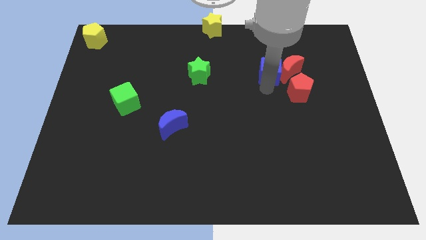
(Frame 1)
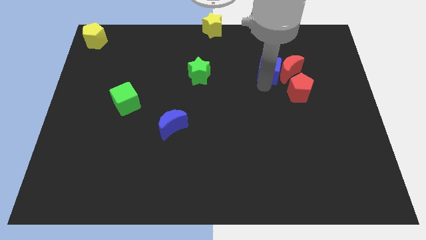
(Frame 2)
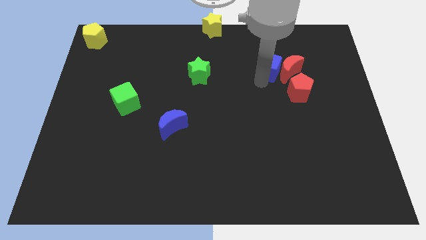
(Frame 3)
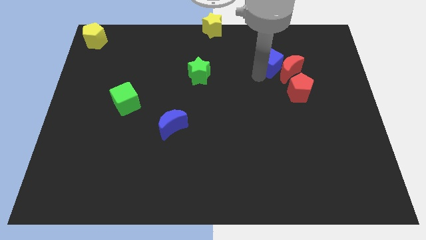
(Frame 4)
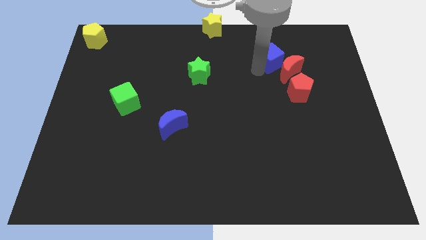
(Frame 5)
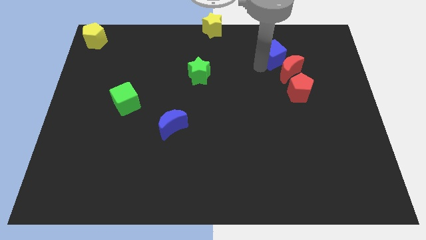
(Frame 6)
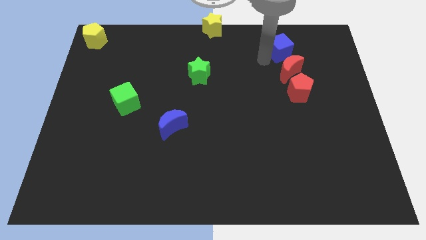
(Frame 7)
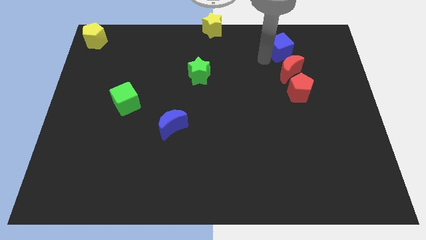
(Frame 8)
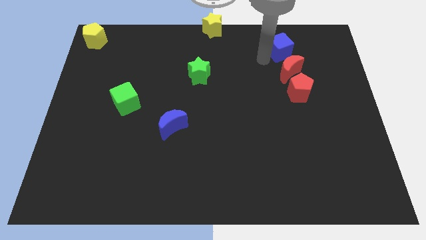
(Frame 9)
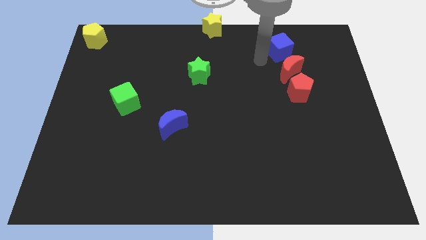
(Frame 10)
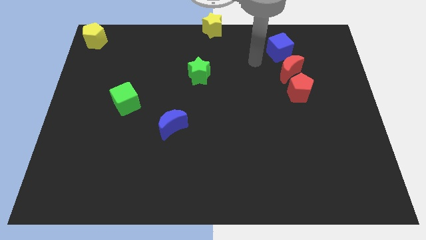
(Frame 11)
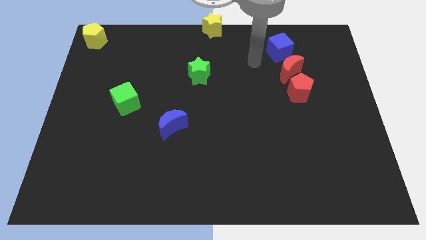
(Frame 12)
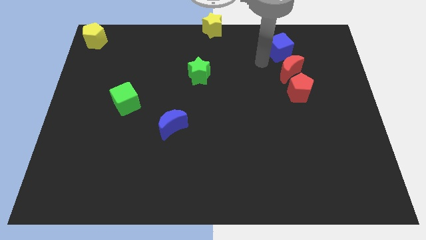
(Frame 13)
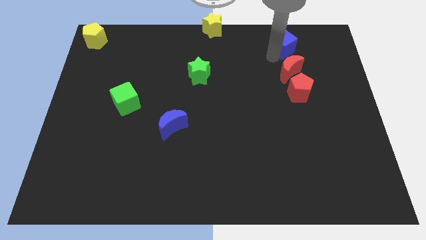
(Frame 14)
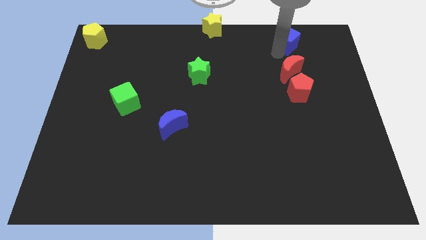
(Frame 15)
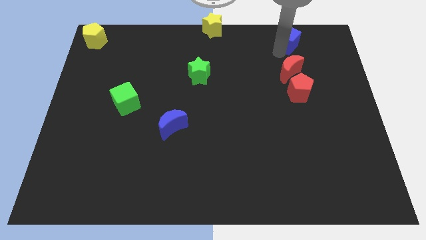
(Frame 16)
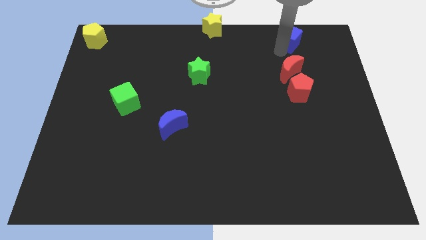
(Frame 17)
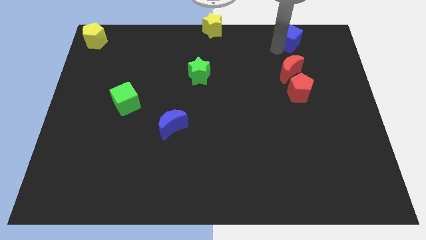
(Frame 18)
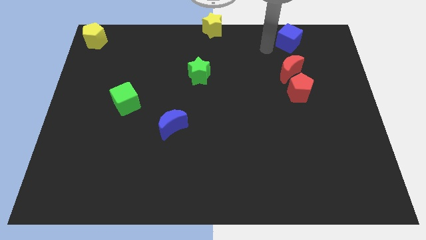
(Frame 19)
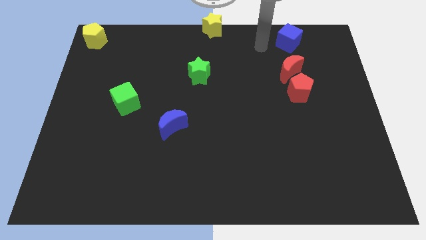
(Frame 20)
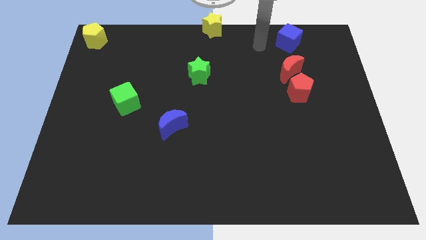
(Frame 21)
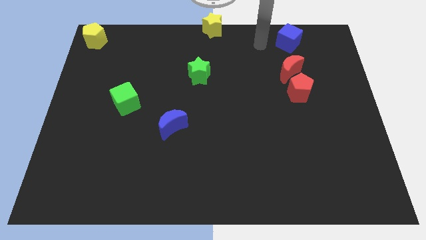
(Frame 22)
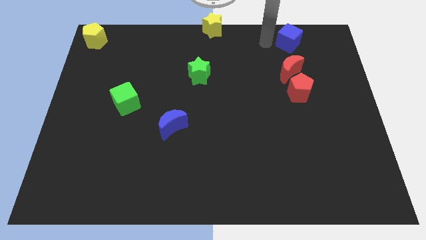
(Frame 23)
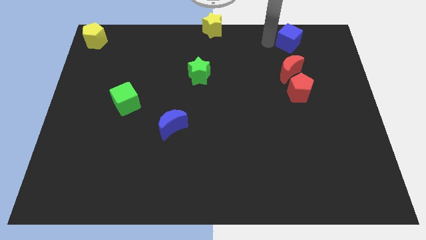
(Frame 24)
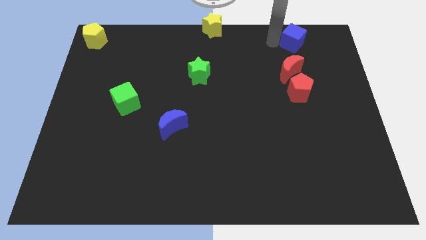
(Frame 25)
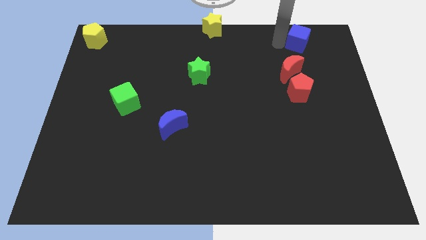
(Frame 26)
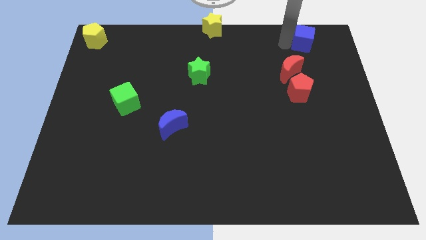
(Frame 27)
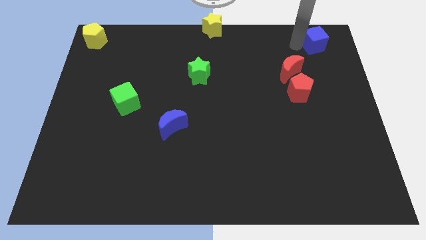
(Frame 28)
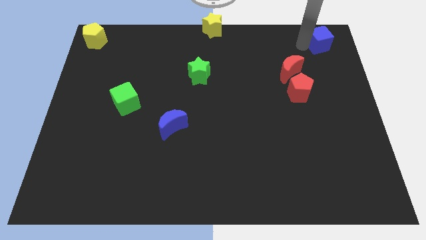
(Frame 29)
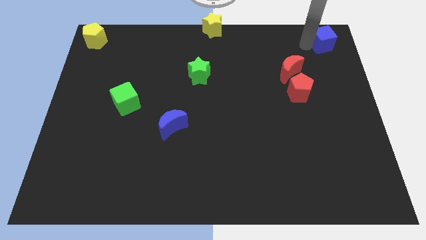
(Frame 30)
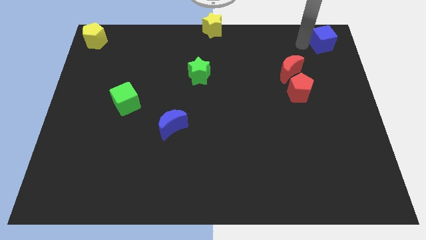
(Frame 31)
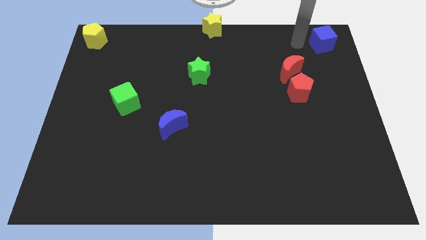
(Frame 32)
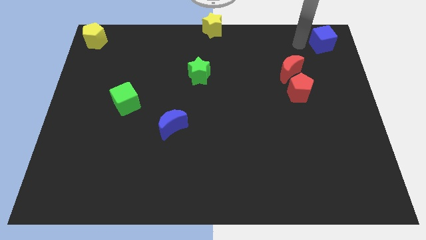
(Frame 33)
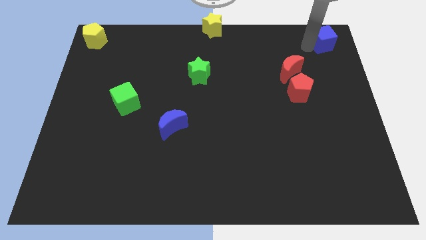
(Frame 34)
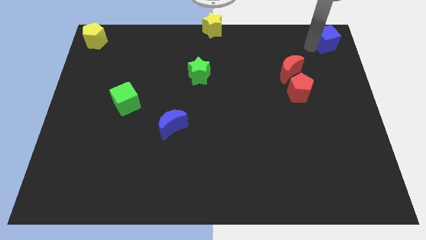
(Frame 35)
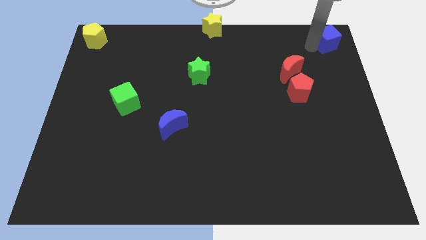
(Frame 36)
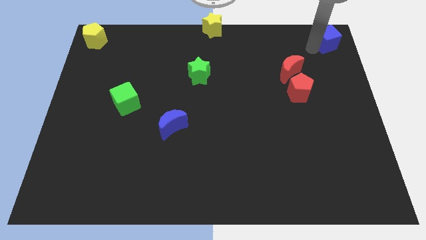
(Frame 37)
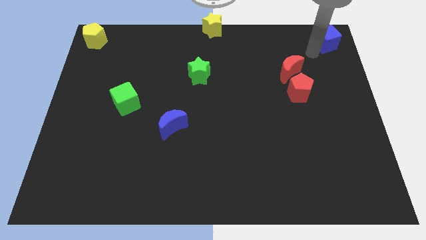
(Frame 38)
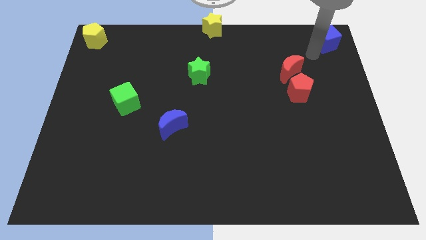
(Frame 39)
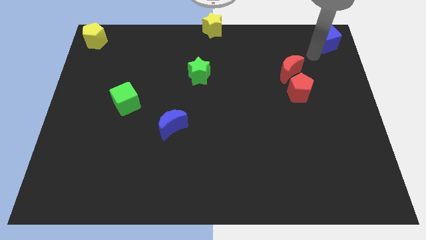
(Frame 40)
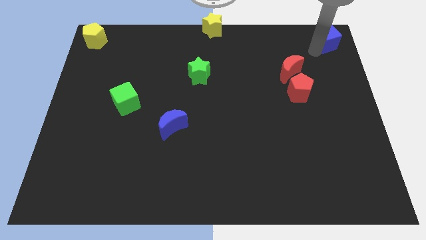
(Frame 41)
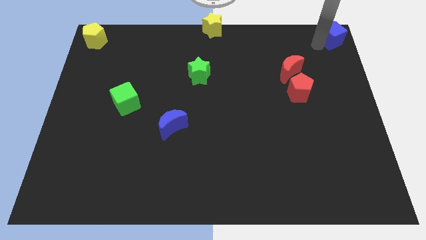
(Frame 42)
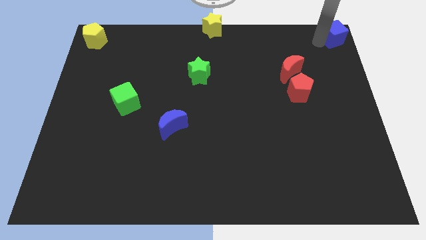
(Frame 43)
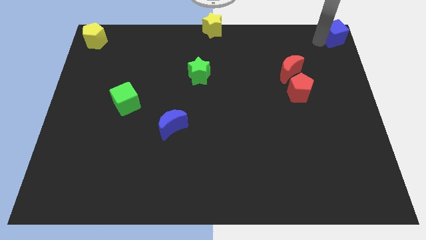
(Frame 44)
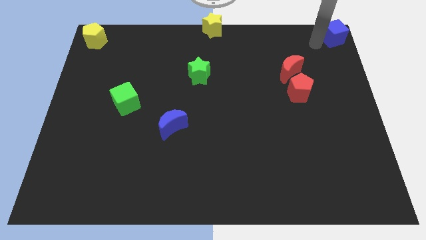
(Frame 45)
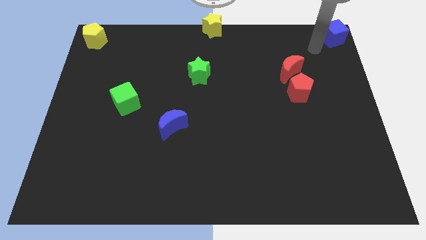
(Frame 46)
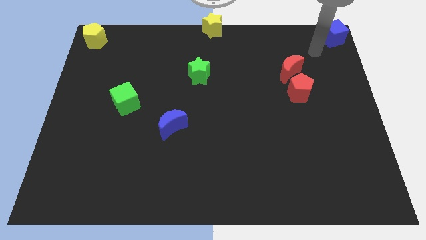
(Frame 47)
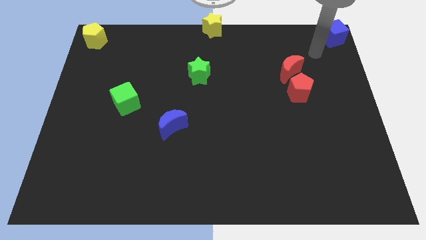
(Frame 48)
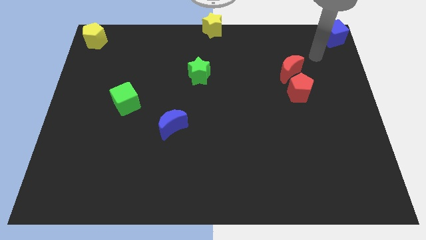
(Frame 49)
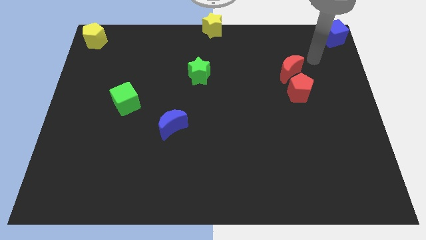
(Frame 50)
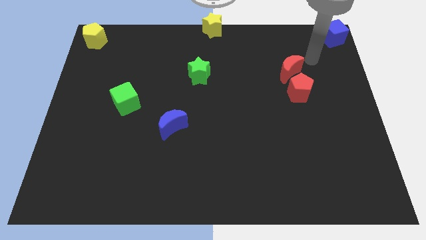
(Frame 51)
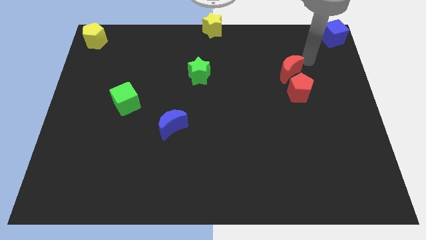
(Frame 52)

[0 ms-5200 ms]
place the blue cube at the top right corner of the board

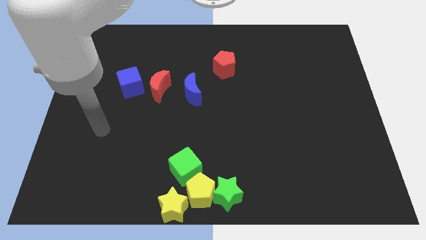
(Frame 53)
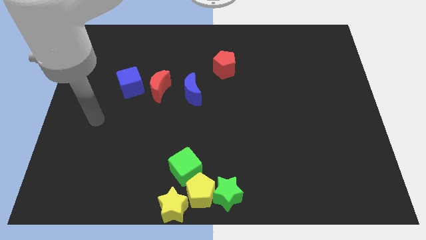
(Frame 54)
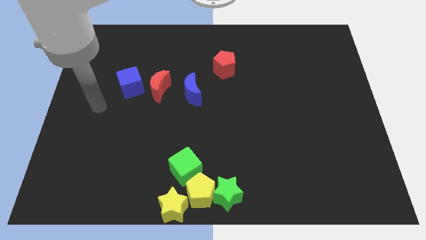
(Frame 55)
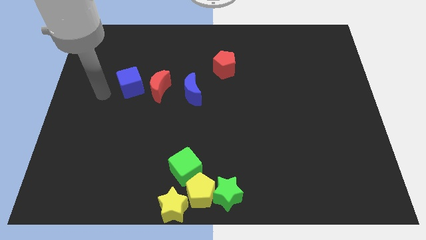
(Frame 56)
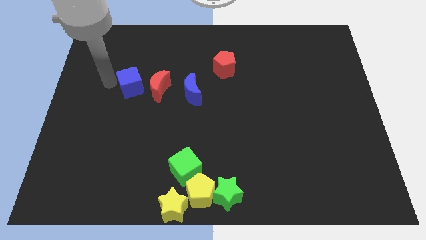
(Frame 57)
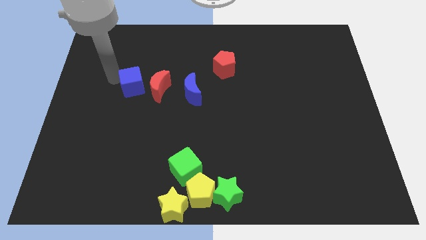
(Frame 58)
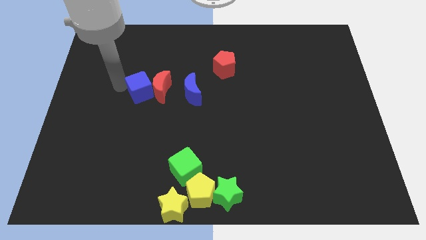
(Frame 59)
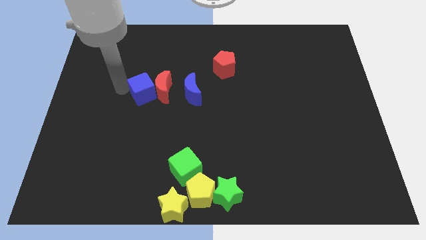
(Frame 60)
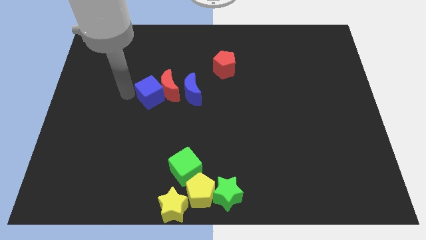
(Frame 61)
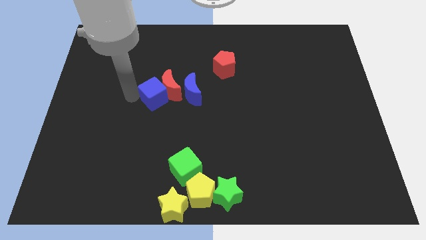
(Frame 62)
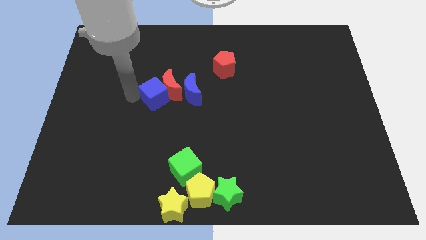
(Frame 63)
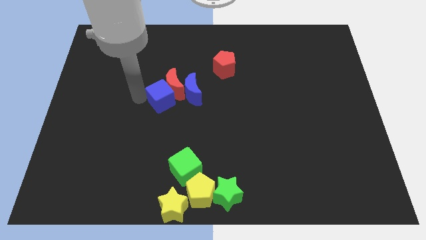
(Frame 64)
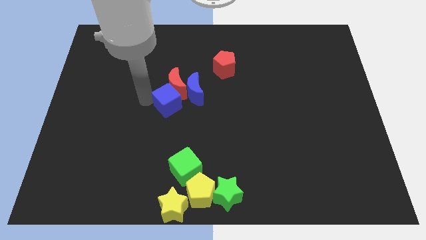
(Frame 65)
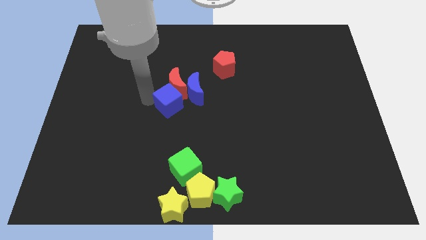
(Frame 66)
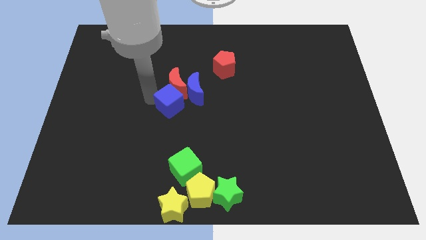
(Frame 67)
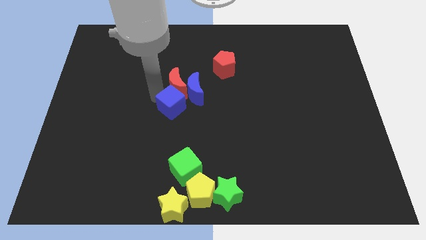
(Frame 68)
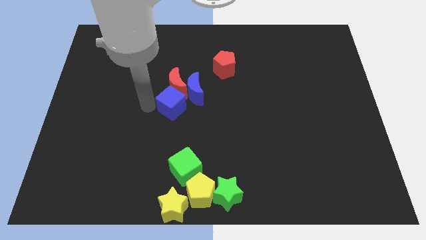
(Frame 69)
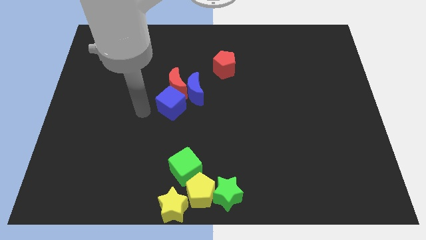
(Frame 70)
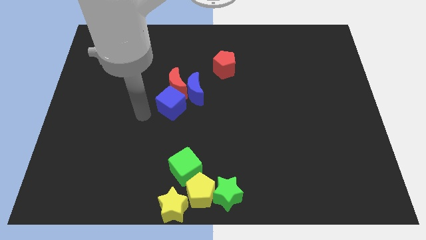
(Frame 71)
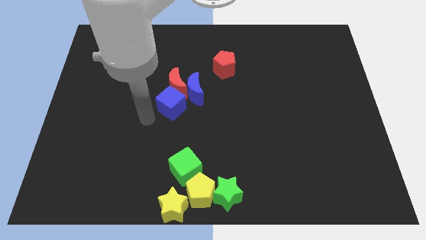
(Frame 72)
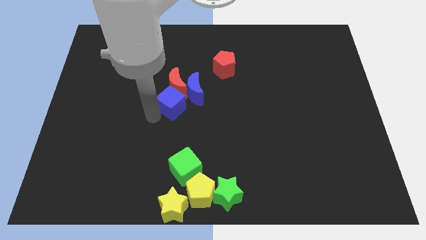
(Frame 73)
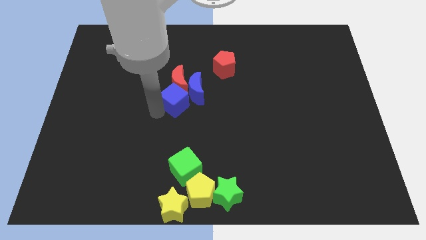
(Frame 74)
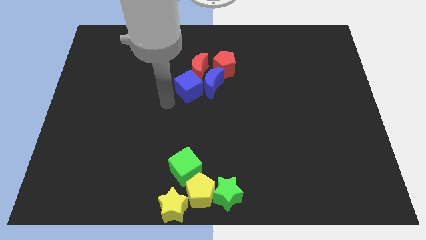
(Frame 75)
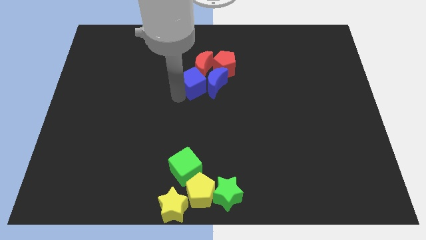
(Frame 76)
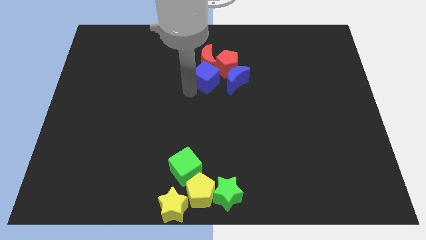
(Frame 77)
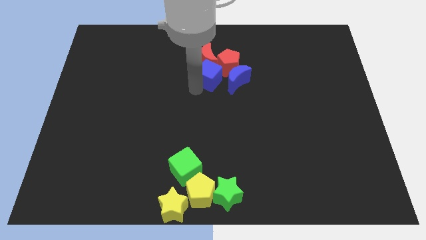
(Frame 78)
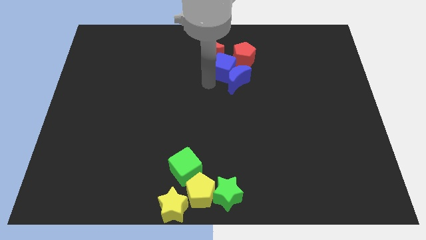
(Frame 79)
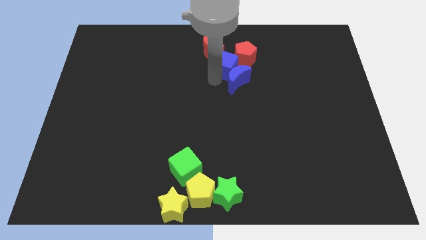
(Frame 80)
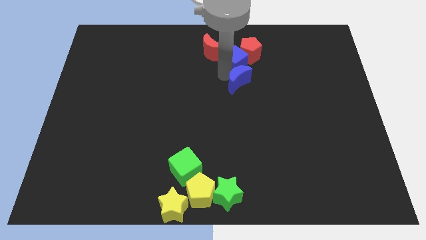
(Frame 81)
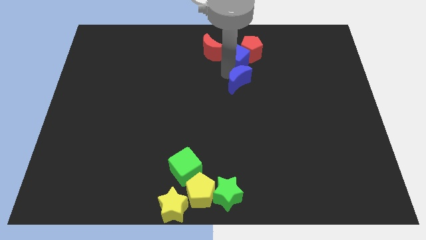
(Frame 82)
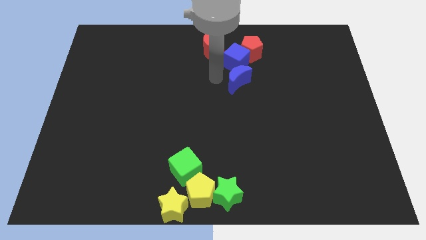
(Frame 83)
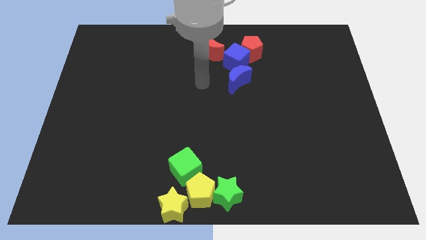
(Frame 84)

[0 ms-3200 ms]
push the blue cube and blue moon towards top center

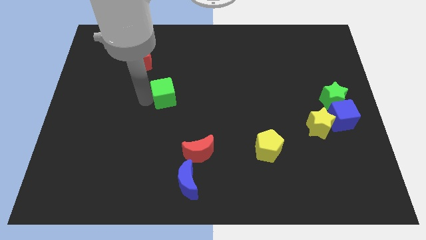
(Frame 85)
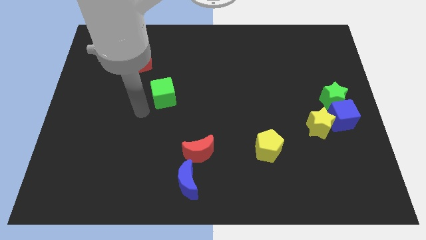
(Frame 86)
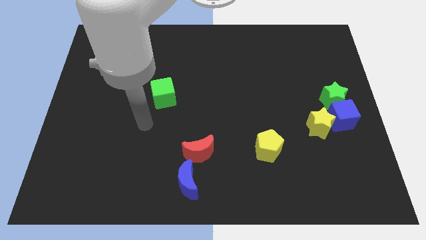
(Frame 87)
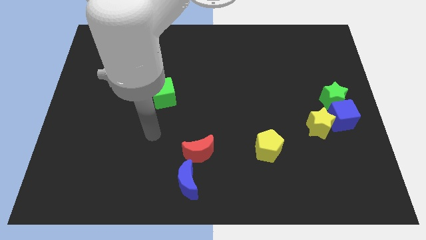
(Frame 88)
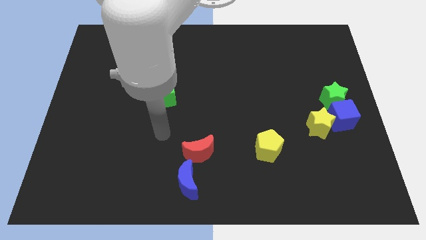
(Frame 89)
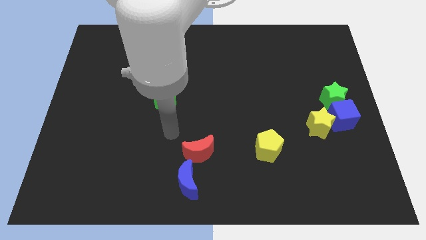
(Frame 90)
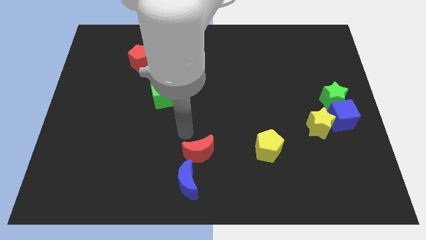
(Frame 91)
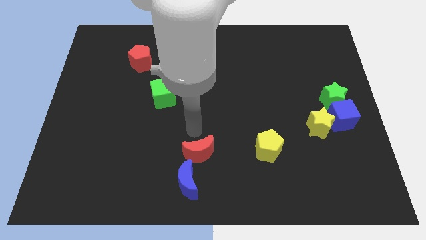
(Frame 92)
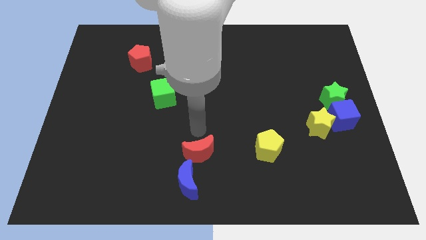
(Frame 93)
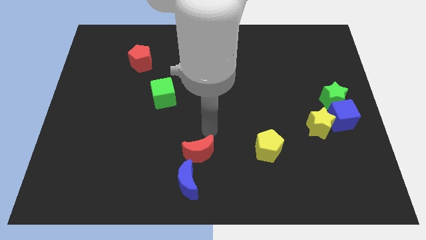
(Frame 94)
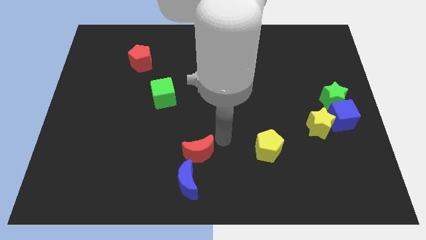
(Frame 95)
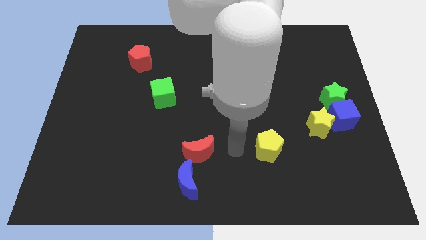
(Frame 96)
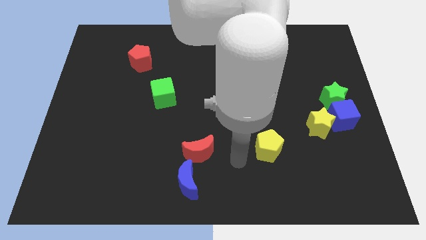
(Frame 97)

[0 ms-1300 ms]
move your arm away from green cube
